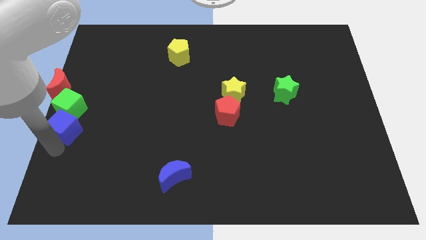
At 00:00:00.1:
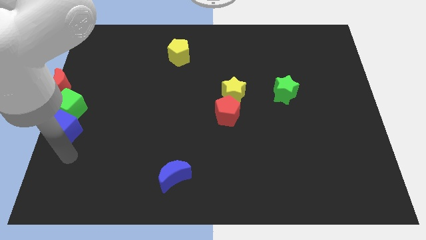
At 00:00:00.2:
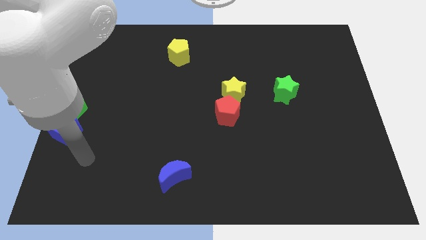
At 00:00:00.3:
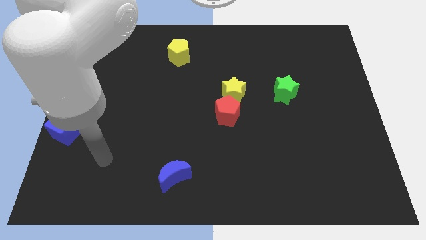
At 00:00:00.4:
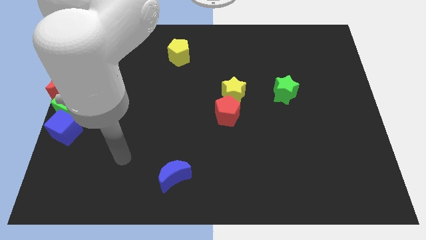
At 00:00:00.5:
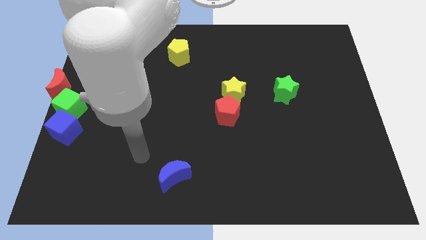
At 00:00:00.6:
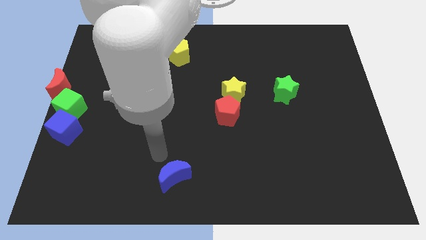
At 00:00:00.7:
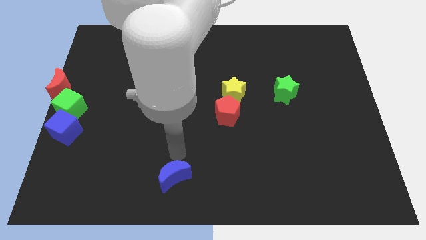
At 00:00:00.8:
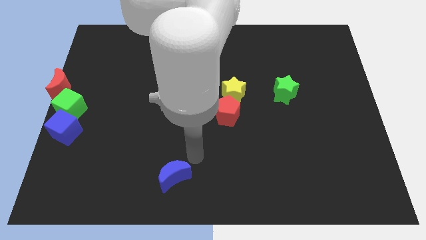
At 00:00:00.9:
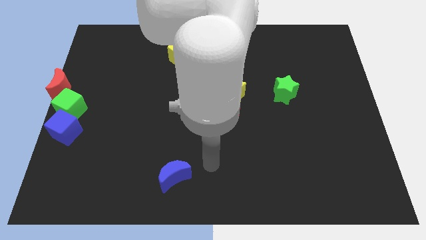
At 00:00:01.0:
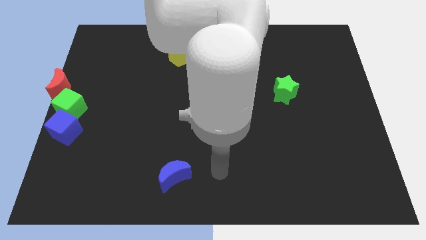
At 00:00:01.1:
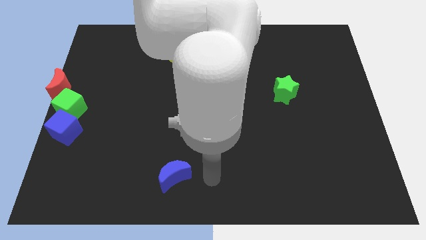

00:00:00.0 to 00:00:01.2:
go and place your arm at the right side of the blue crescent

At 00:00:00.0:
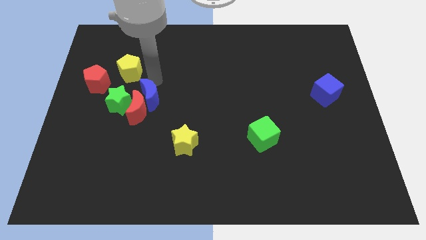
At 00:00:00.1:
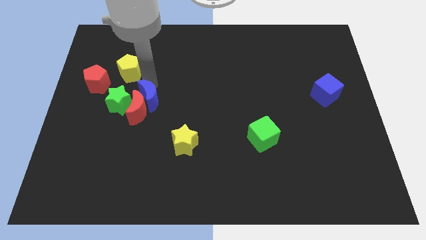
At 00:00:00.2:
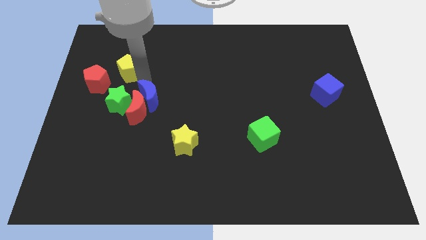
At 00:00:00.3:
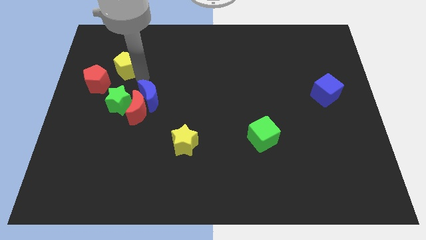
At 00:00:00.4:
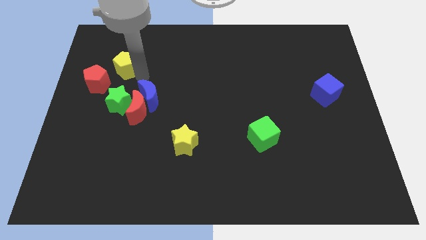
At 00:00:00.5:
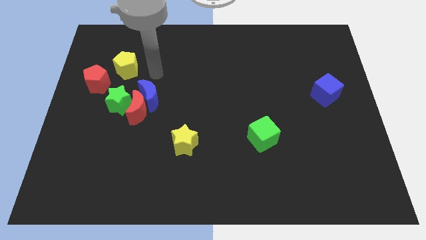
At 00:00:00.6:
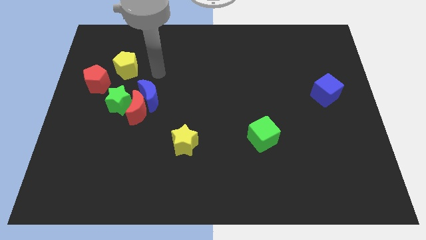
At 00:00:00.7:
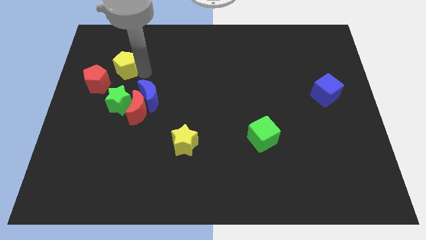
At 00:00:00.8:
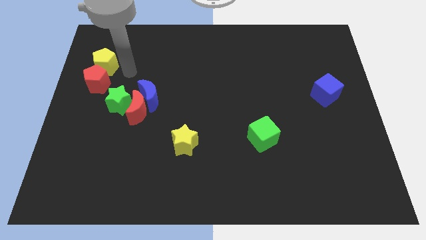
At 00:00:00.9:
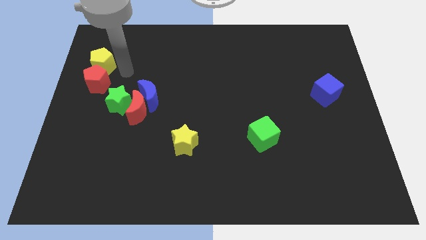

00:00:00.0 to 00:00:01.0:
push the yellow pentagon to the top of the red pentagon

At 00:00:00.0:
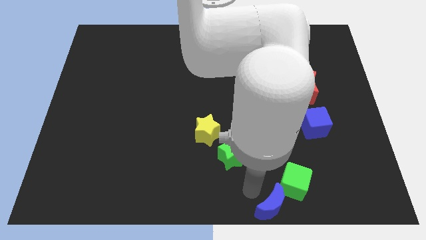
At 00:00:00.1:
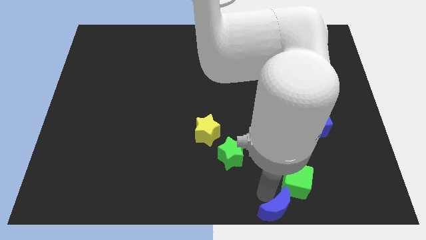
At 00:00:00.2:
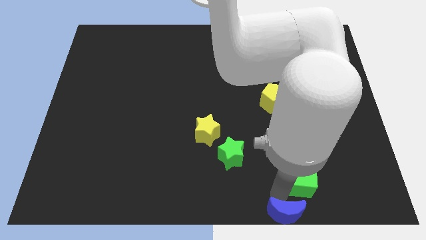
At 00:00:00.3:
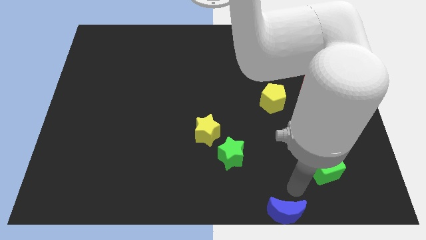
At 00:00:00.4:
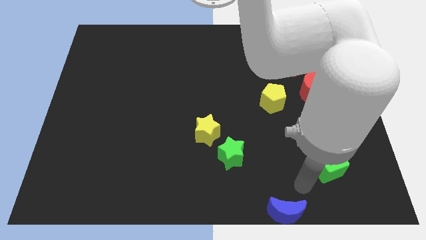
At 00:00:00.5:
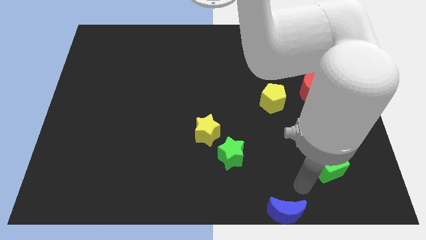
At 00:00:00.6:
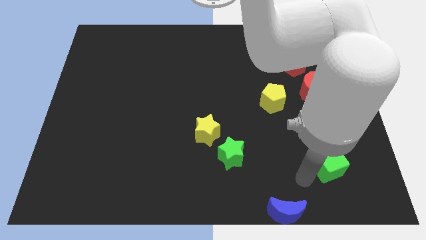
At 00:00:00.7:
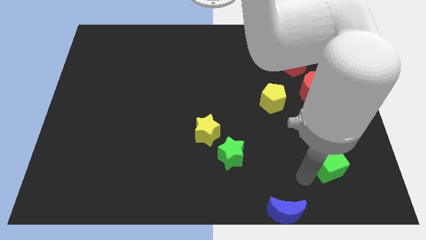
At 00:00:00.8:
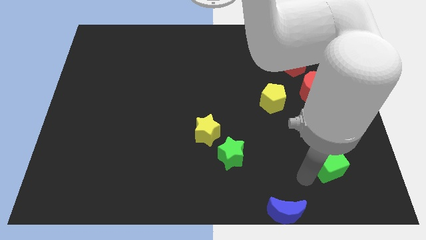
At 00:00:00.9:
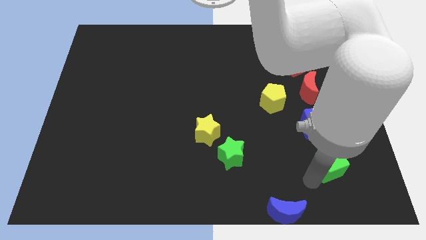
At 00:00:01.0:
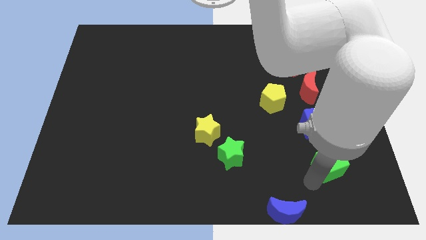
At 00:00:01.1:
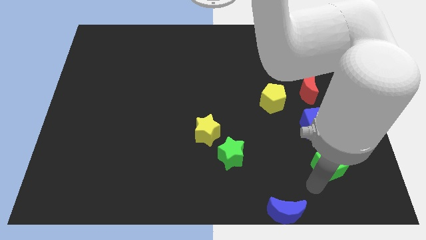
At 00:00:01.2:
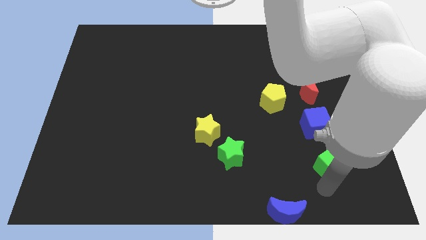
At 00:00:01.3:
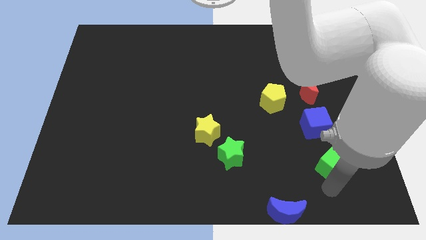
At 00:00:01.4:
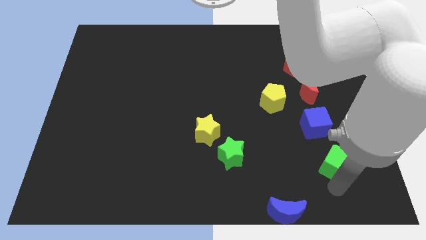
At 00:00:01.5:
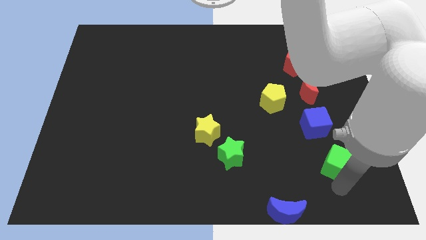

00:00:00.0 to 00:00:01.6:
push the green cube away from the blue crescent

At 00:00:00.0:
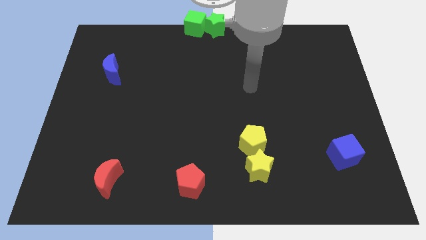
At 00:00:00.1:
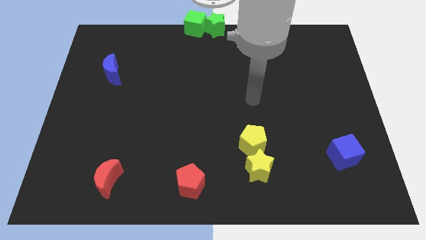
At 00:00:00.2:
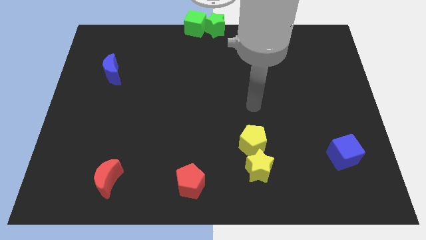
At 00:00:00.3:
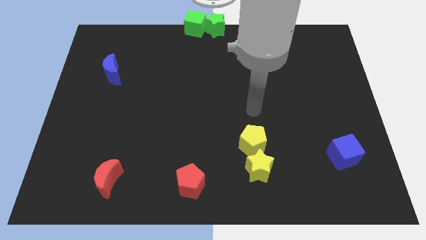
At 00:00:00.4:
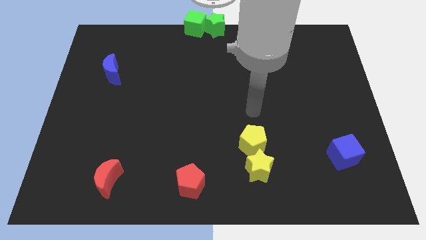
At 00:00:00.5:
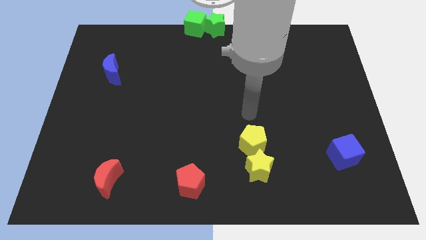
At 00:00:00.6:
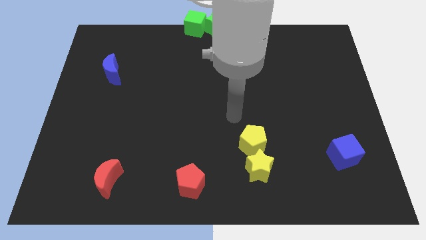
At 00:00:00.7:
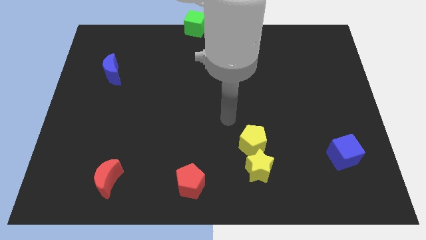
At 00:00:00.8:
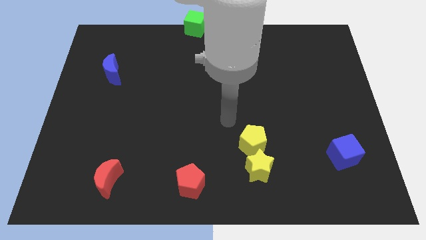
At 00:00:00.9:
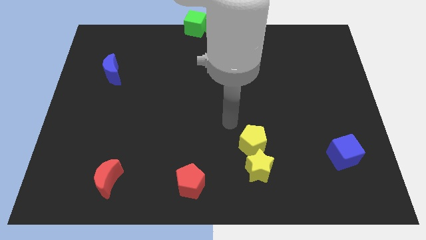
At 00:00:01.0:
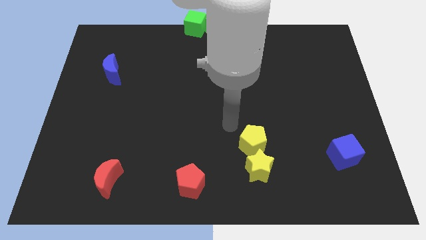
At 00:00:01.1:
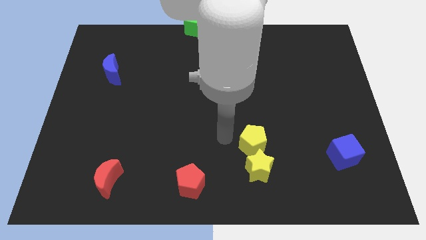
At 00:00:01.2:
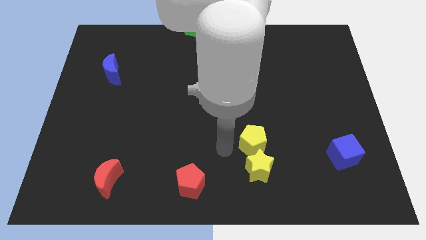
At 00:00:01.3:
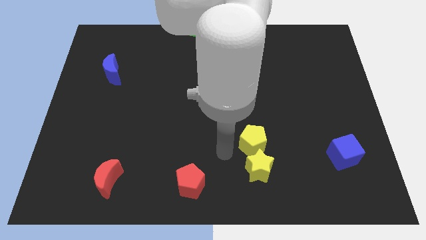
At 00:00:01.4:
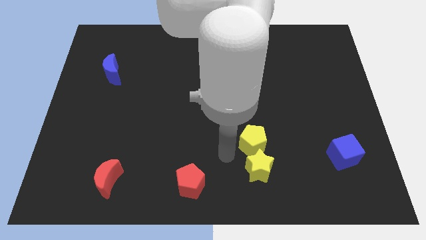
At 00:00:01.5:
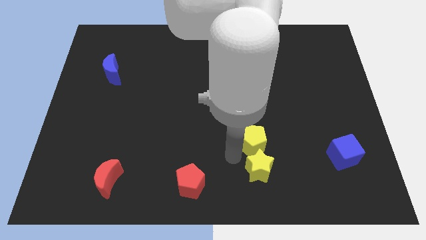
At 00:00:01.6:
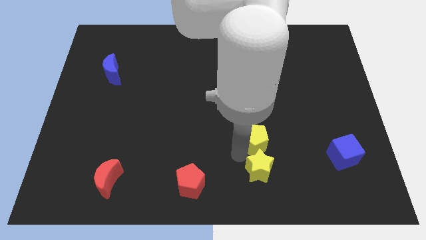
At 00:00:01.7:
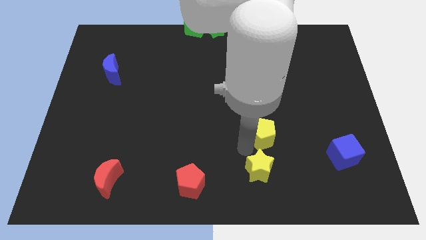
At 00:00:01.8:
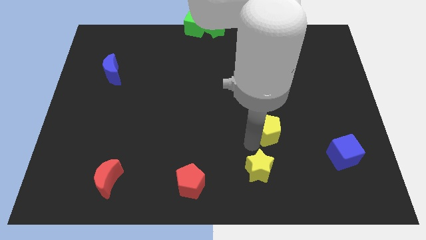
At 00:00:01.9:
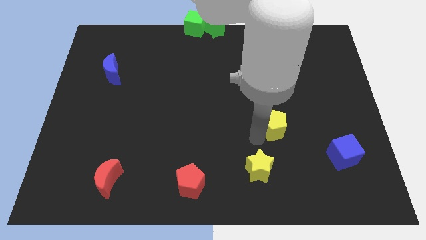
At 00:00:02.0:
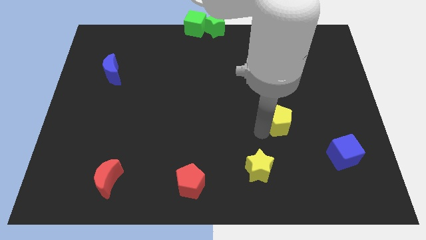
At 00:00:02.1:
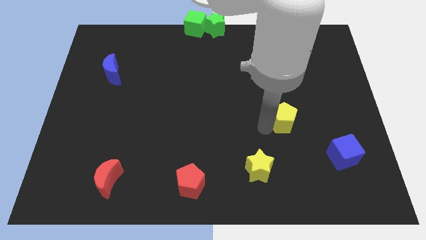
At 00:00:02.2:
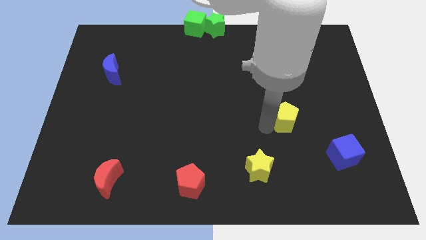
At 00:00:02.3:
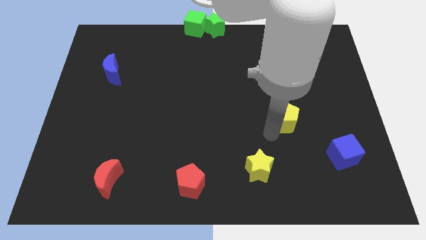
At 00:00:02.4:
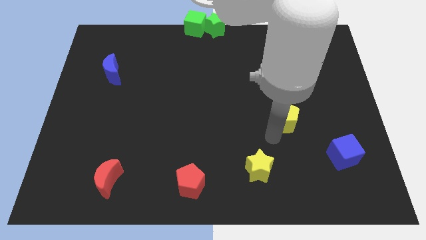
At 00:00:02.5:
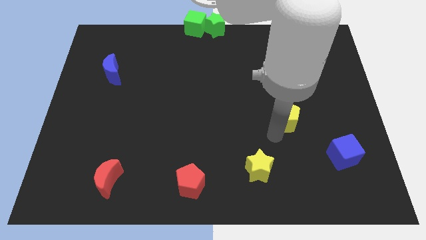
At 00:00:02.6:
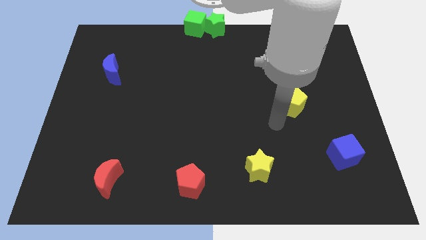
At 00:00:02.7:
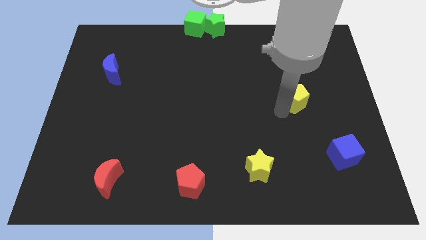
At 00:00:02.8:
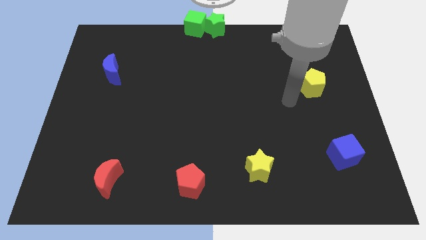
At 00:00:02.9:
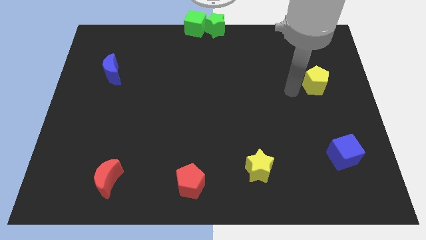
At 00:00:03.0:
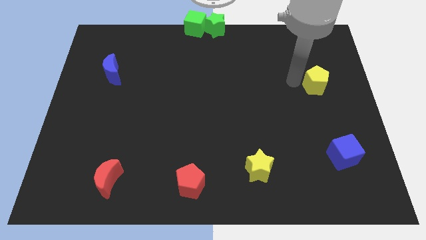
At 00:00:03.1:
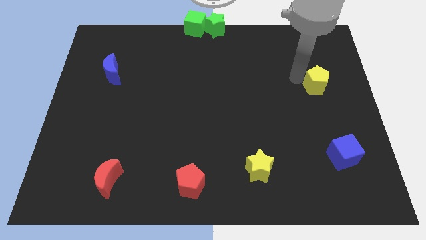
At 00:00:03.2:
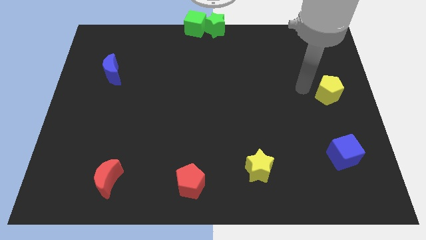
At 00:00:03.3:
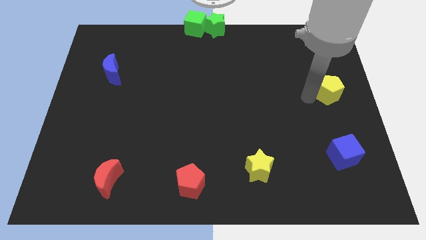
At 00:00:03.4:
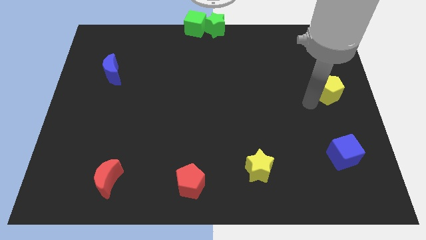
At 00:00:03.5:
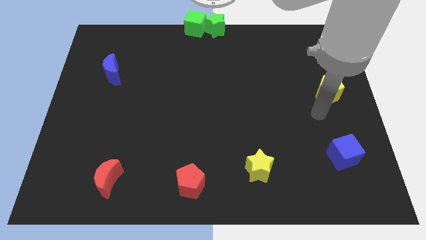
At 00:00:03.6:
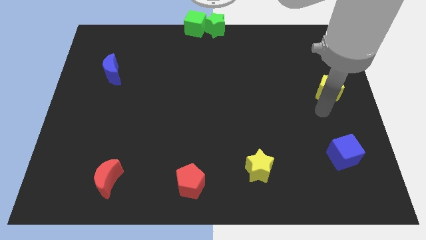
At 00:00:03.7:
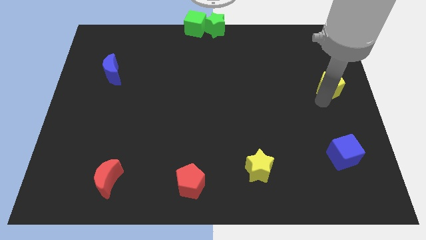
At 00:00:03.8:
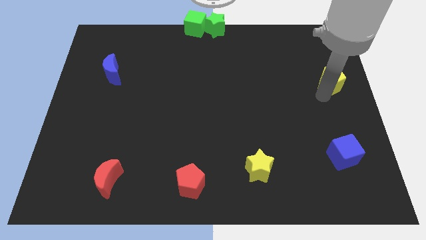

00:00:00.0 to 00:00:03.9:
move the yellow pentagon to the top of the blue cube

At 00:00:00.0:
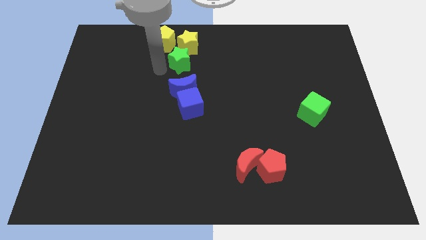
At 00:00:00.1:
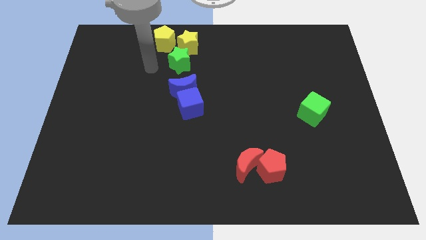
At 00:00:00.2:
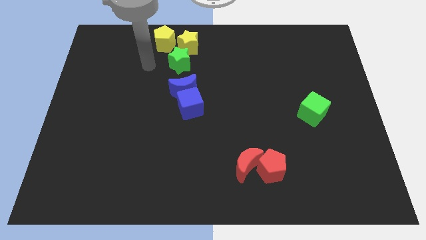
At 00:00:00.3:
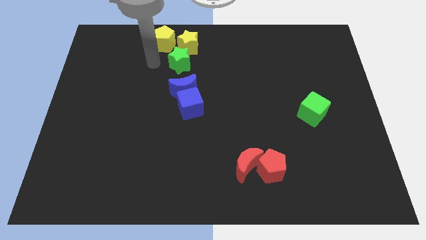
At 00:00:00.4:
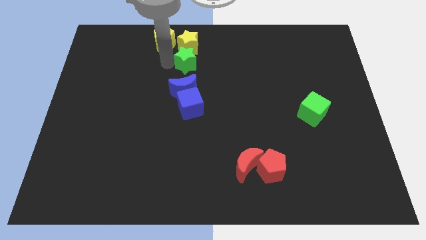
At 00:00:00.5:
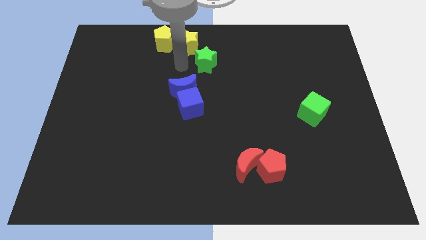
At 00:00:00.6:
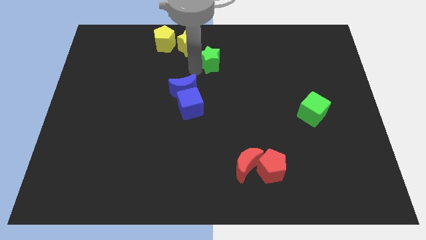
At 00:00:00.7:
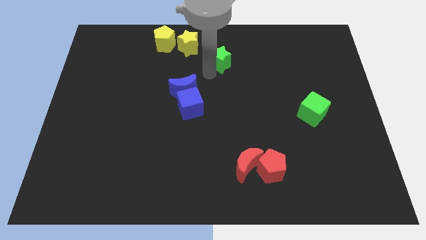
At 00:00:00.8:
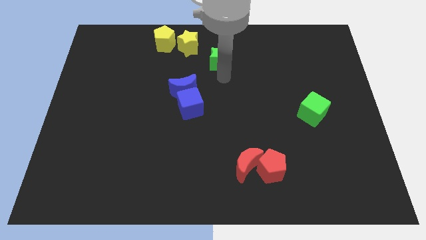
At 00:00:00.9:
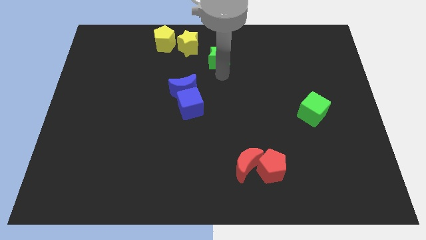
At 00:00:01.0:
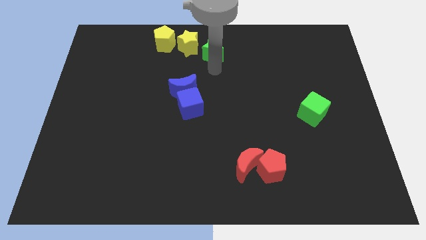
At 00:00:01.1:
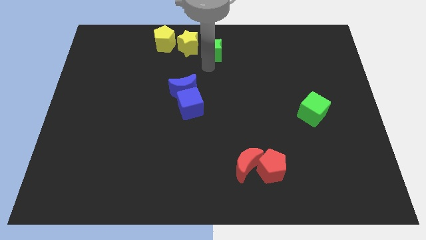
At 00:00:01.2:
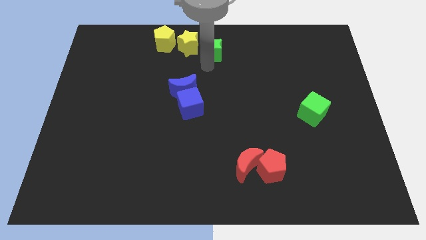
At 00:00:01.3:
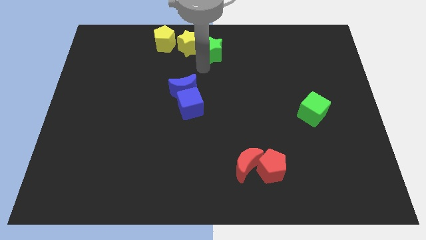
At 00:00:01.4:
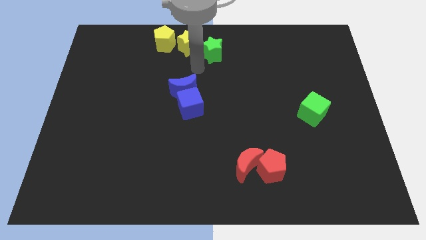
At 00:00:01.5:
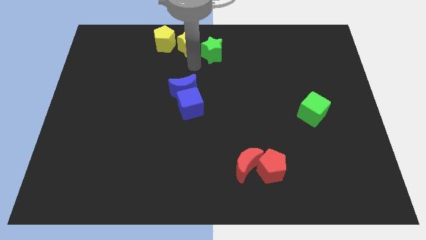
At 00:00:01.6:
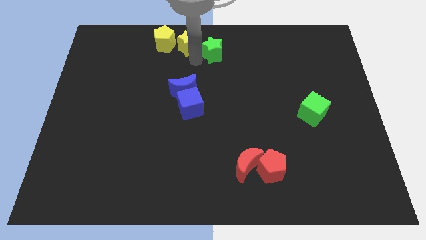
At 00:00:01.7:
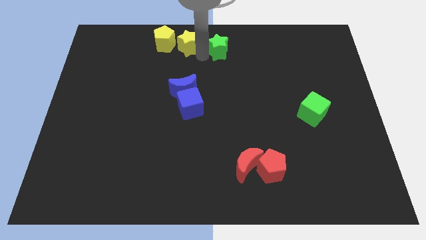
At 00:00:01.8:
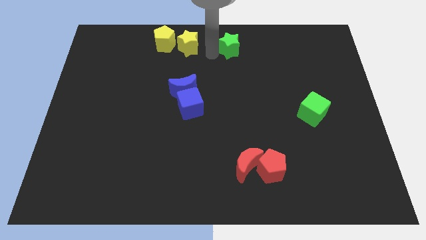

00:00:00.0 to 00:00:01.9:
move green star right beside the yellow star
